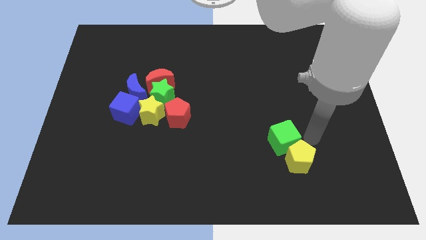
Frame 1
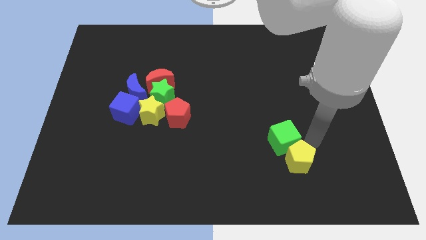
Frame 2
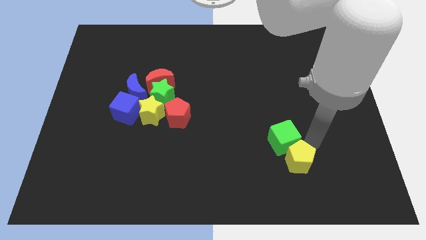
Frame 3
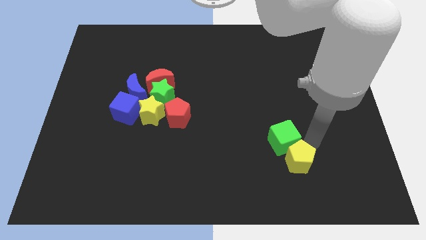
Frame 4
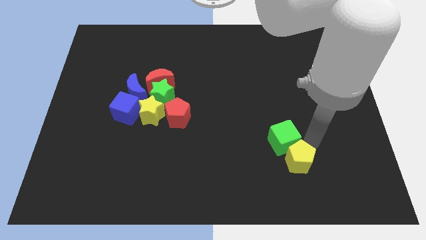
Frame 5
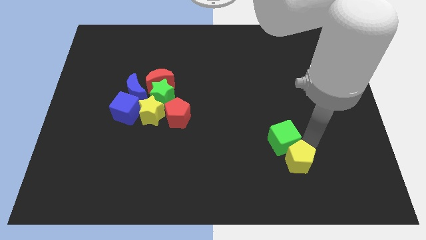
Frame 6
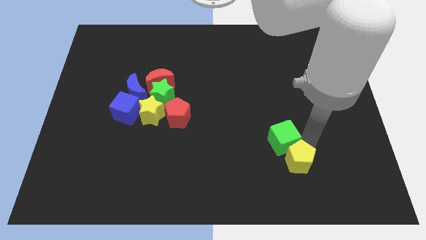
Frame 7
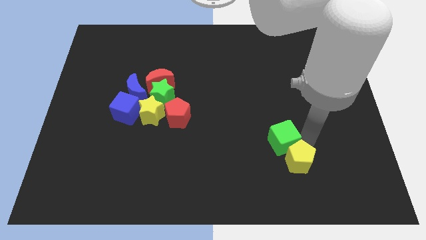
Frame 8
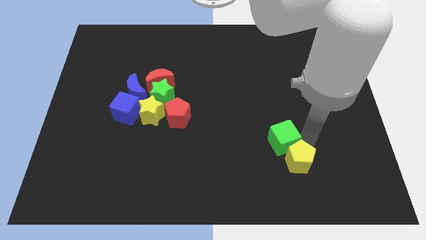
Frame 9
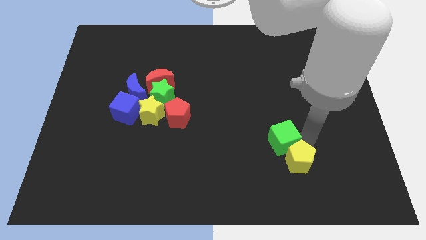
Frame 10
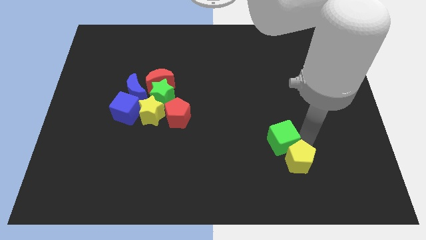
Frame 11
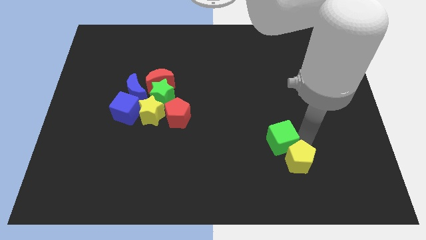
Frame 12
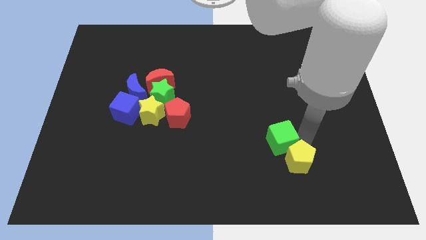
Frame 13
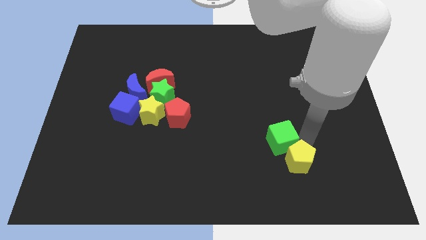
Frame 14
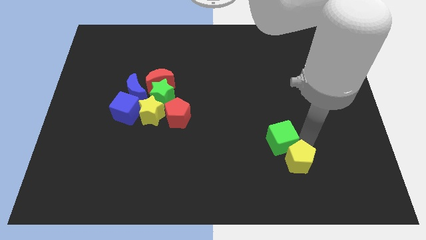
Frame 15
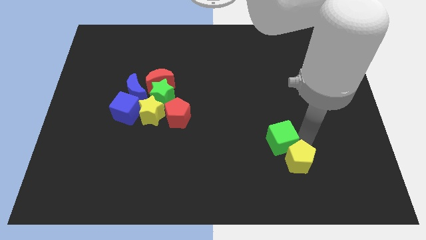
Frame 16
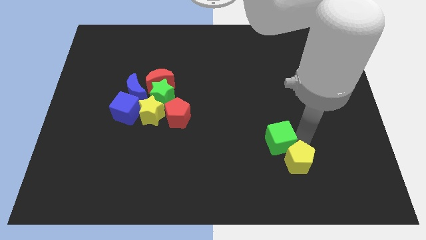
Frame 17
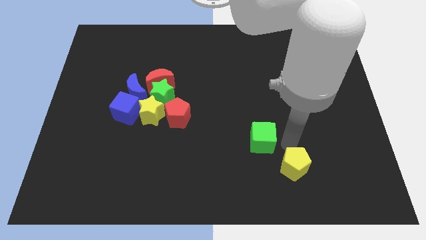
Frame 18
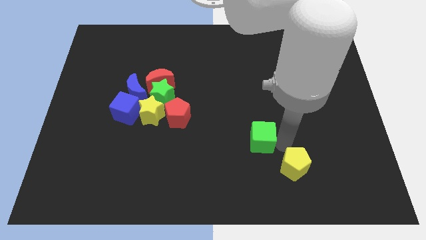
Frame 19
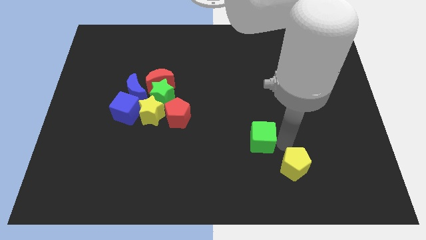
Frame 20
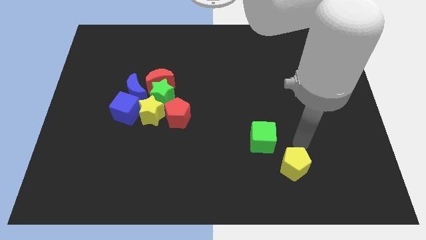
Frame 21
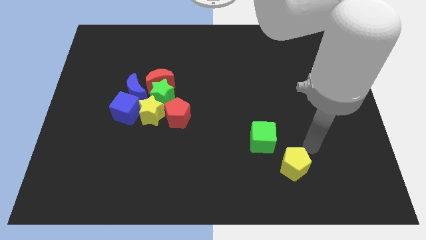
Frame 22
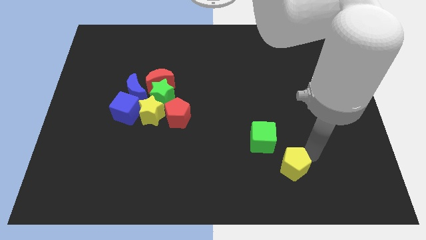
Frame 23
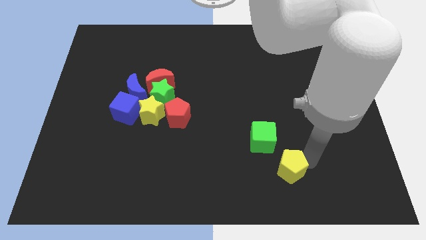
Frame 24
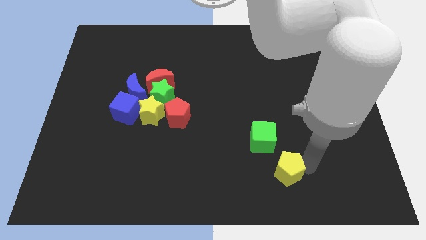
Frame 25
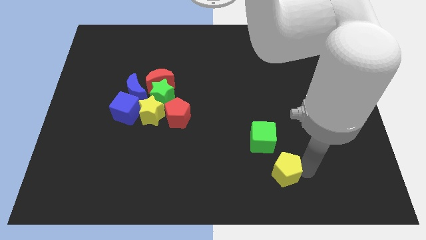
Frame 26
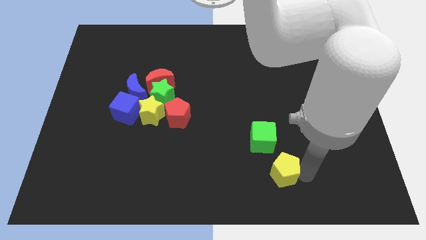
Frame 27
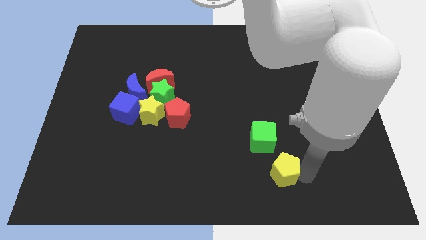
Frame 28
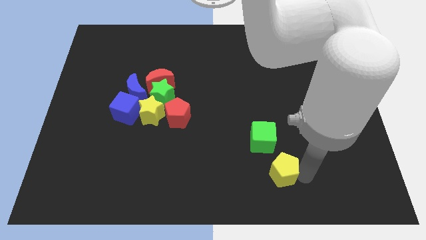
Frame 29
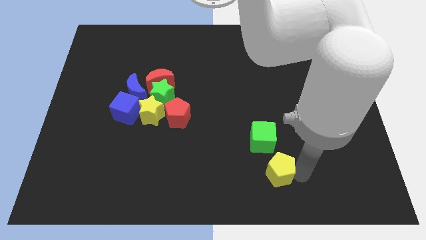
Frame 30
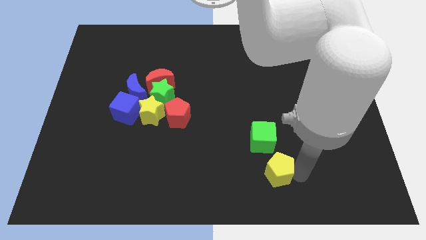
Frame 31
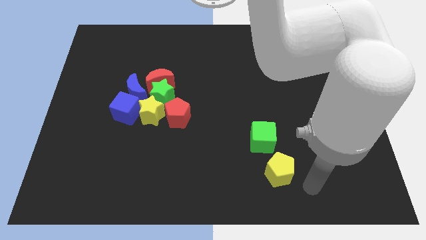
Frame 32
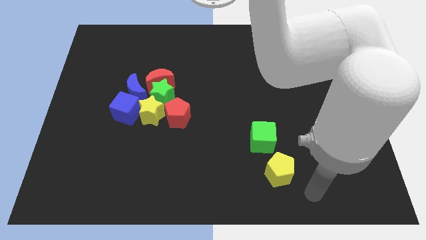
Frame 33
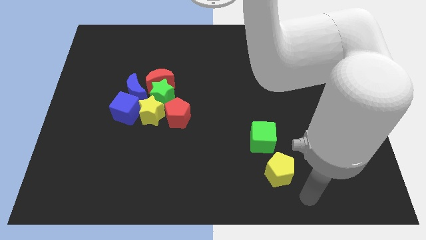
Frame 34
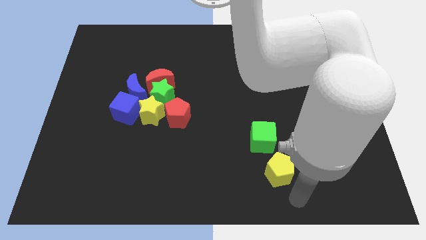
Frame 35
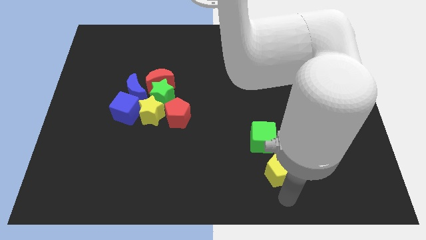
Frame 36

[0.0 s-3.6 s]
separate the green cube and yellow pentagon

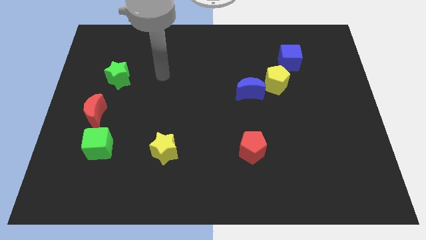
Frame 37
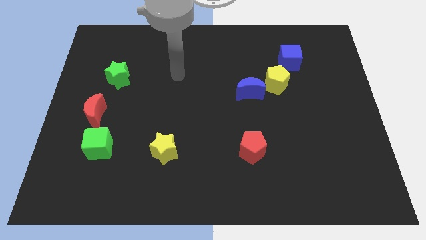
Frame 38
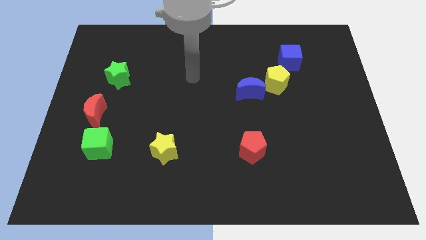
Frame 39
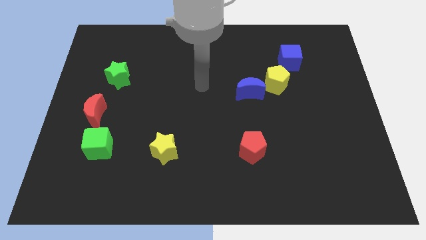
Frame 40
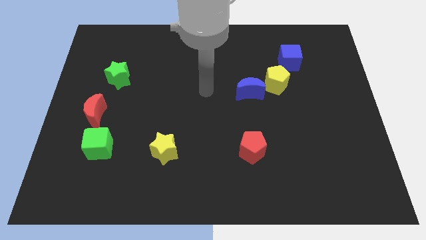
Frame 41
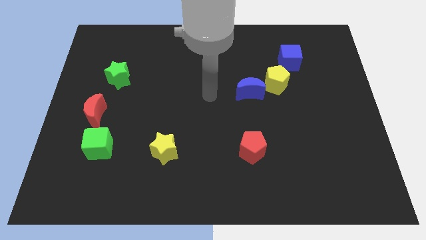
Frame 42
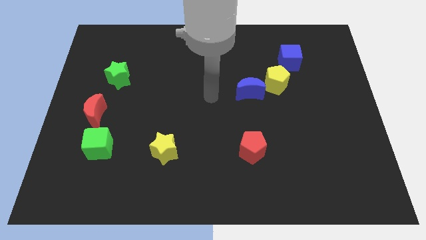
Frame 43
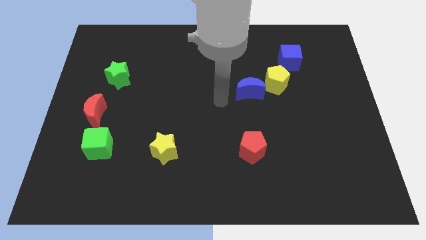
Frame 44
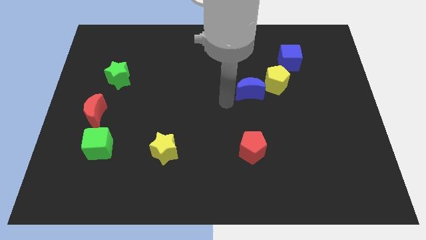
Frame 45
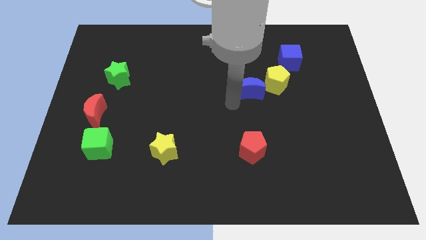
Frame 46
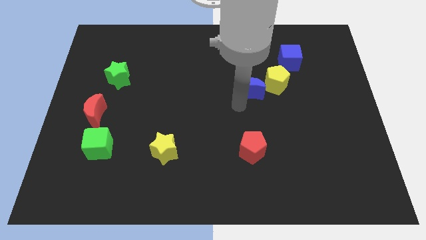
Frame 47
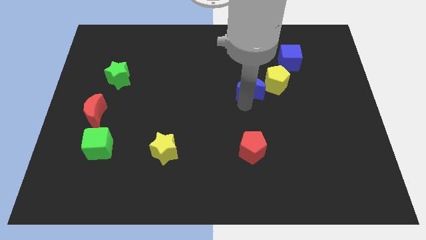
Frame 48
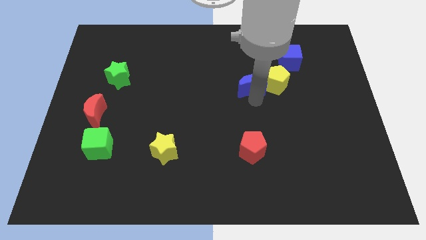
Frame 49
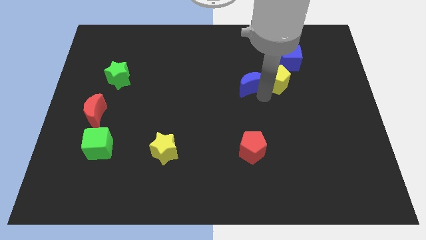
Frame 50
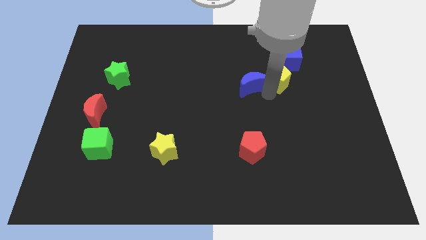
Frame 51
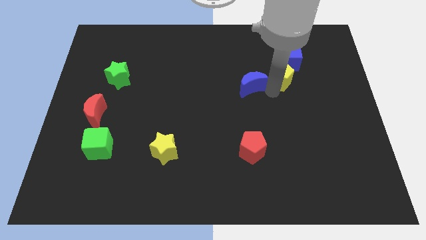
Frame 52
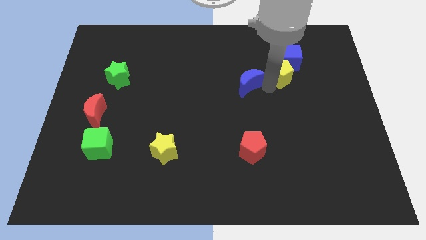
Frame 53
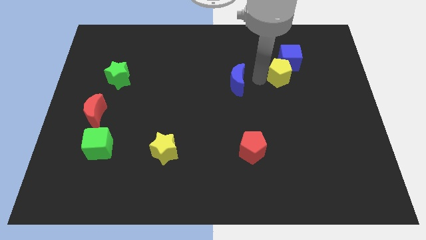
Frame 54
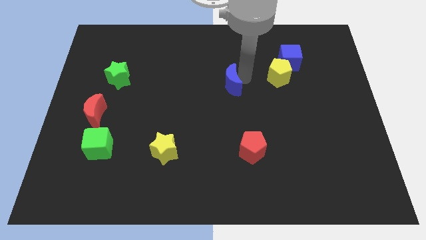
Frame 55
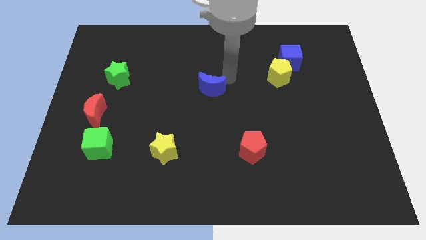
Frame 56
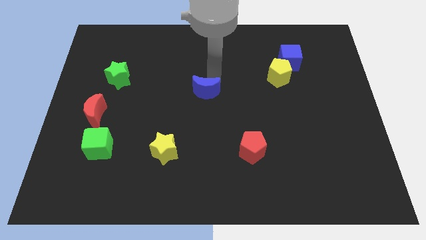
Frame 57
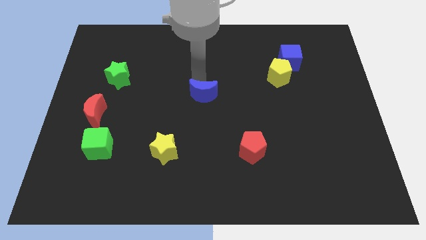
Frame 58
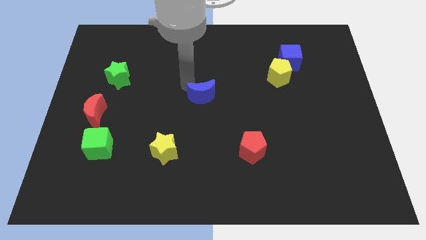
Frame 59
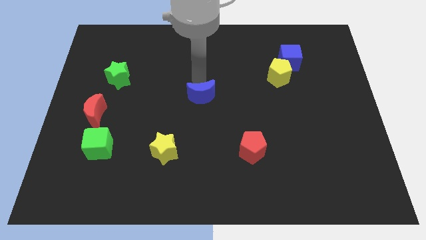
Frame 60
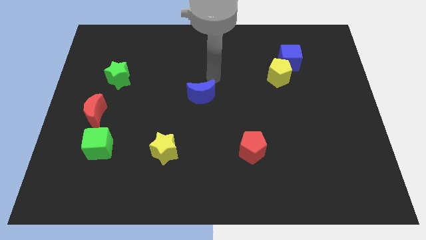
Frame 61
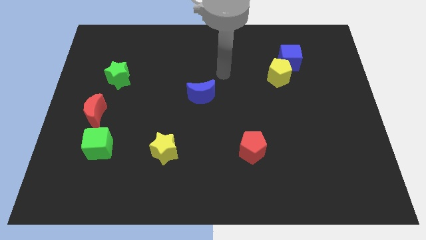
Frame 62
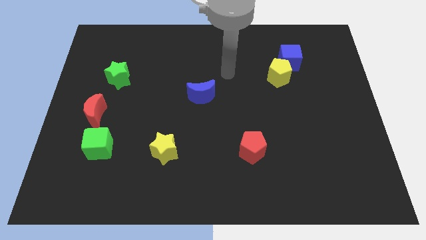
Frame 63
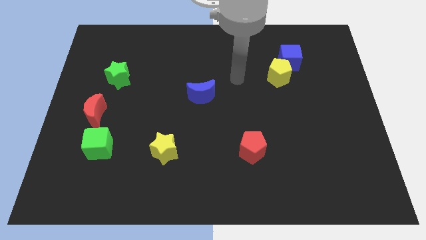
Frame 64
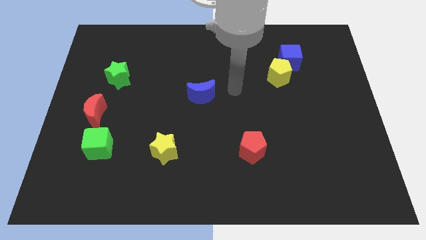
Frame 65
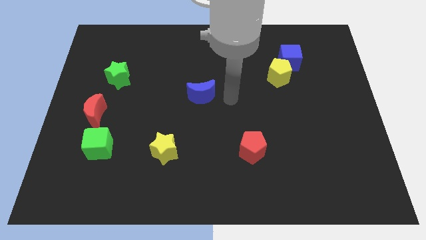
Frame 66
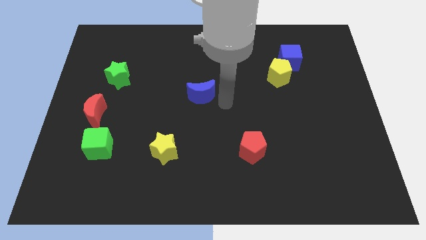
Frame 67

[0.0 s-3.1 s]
move the blue moon away from the yellow pentagon

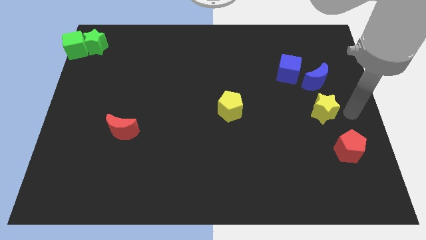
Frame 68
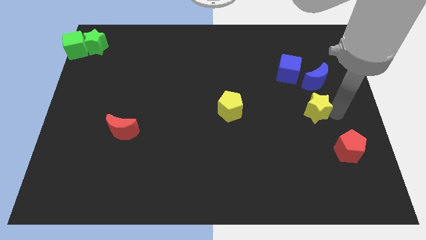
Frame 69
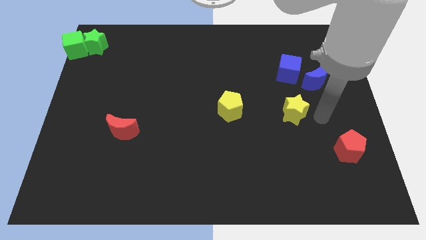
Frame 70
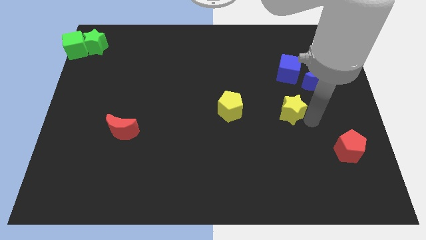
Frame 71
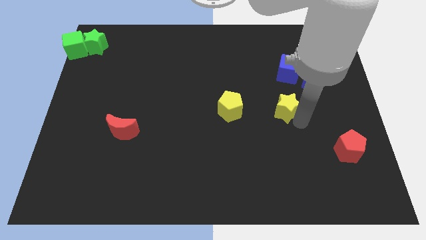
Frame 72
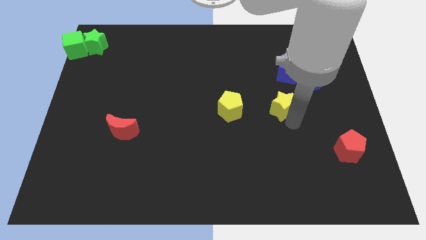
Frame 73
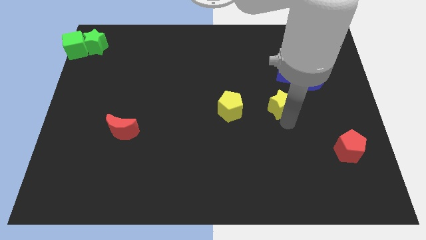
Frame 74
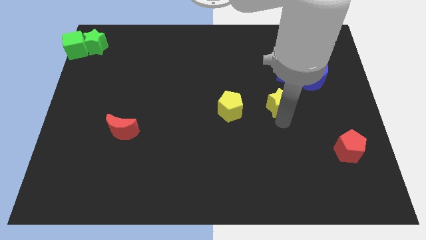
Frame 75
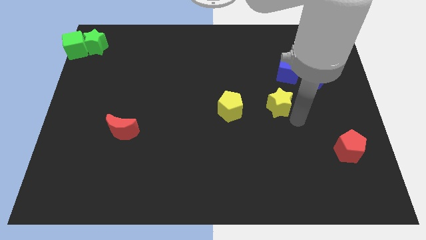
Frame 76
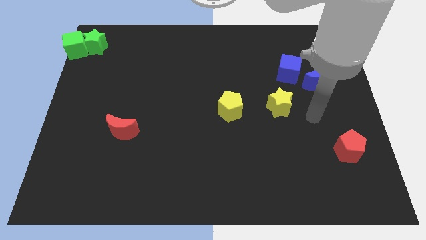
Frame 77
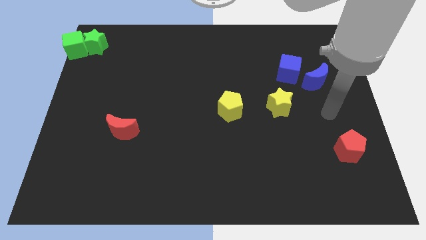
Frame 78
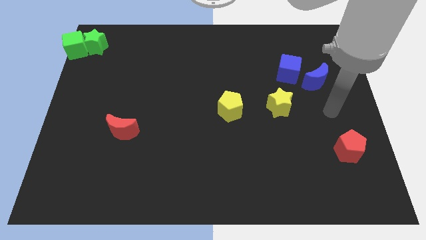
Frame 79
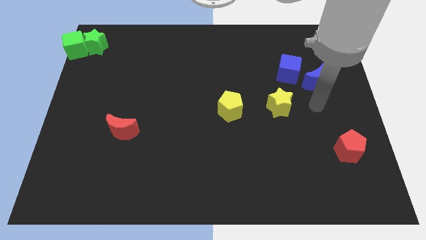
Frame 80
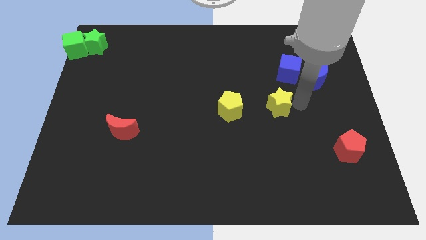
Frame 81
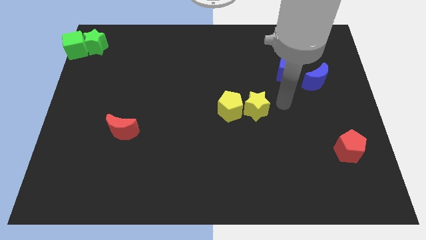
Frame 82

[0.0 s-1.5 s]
push the yellow star to the right side of the yellow pentagon

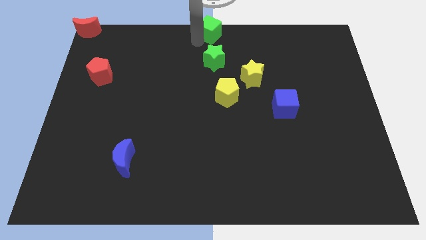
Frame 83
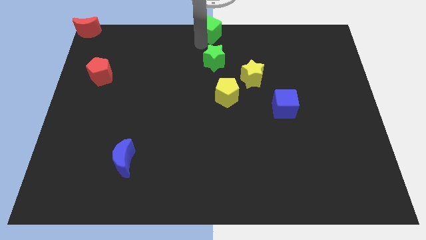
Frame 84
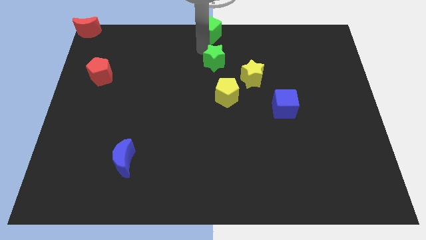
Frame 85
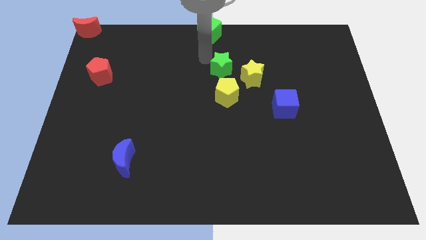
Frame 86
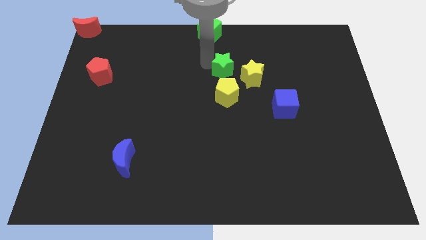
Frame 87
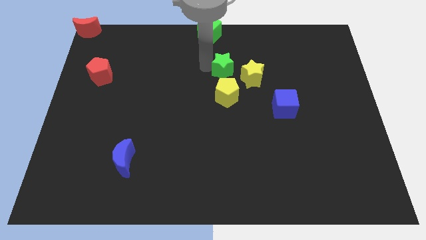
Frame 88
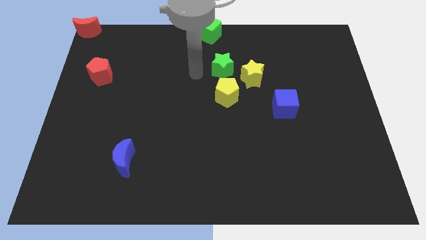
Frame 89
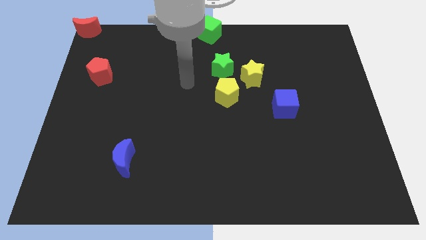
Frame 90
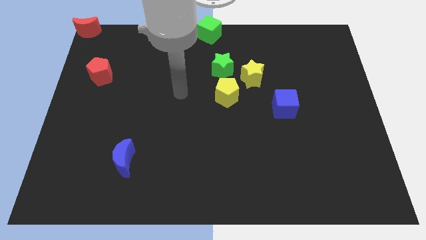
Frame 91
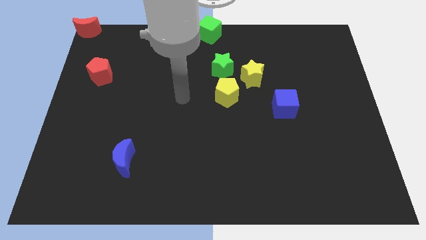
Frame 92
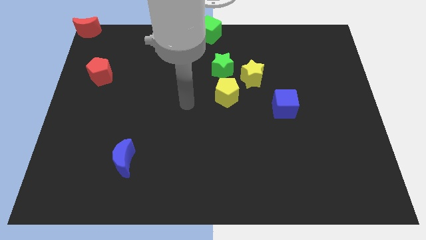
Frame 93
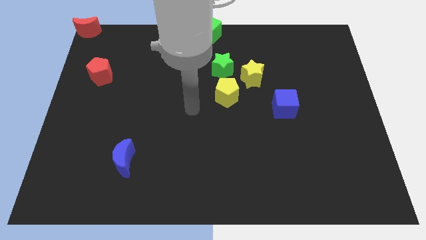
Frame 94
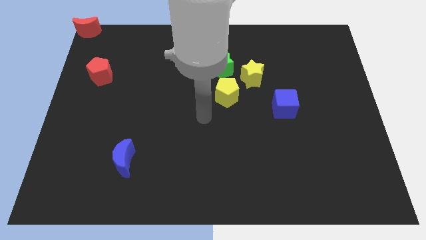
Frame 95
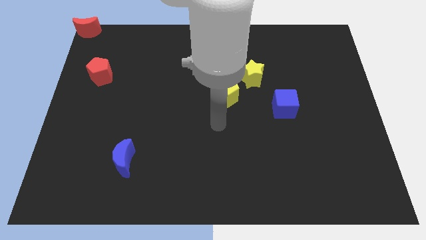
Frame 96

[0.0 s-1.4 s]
place the green star vertical to yellow pentagon
